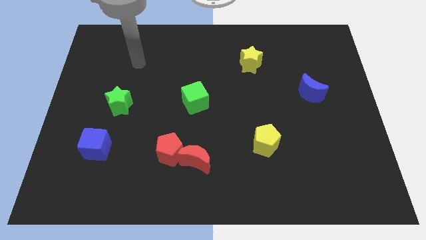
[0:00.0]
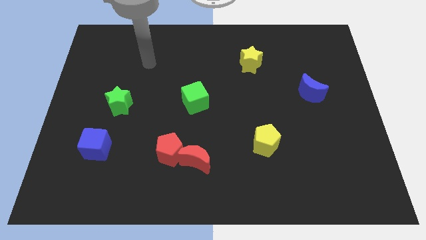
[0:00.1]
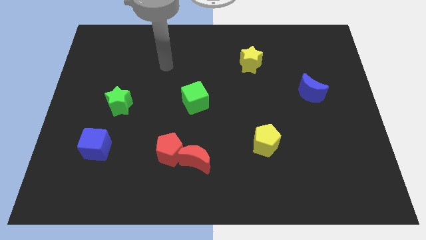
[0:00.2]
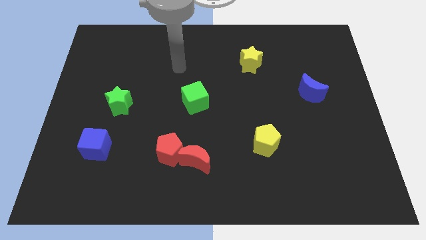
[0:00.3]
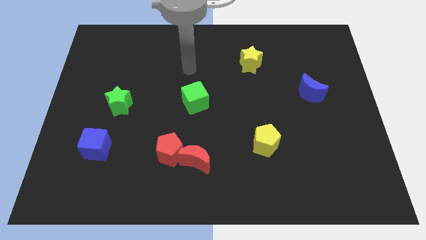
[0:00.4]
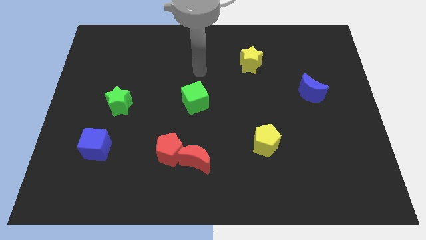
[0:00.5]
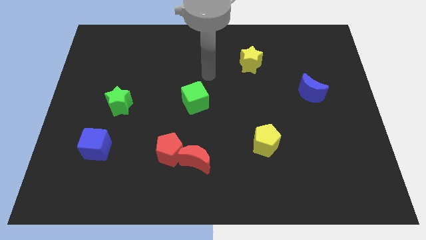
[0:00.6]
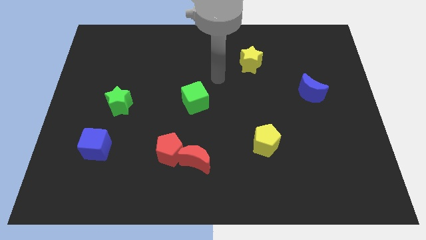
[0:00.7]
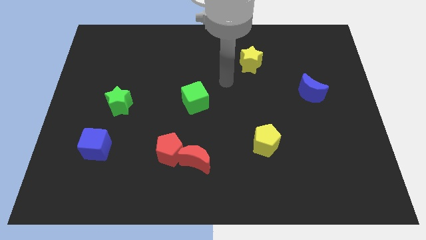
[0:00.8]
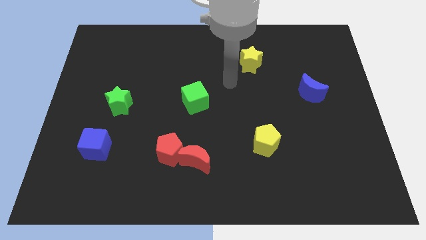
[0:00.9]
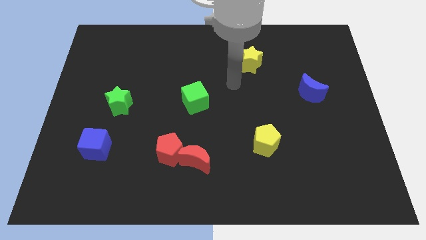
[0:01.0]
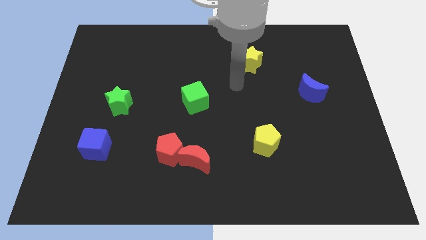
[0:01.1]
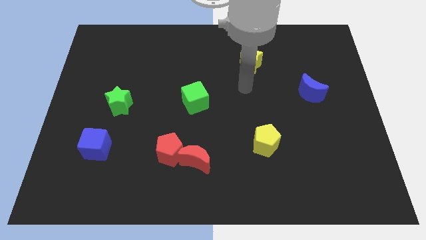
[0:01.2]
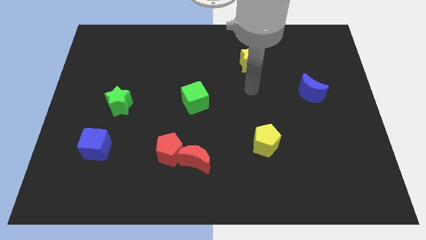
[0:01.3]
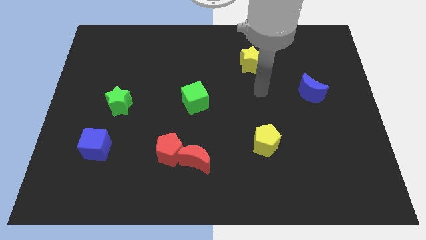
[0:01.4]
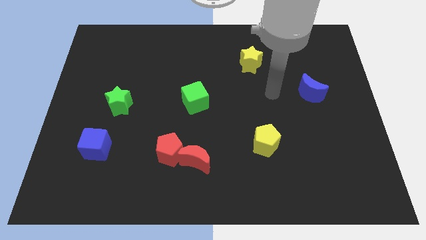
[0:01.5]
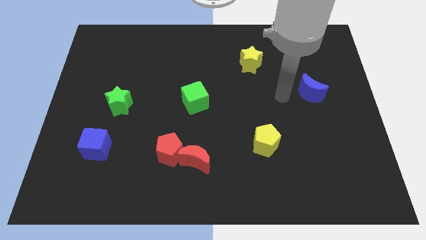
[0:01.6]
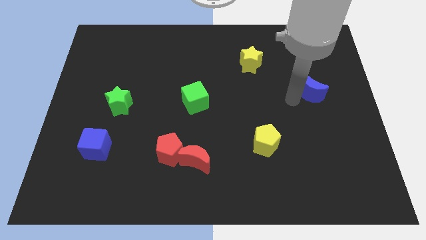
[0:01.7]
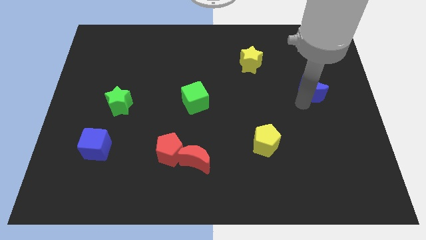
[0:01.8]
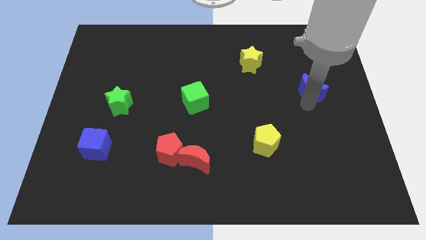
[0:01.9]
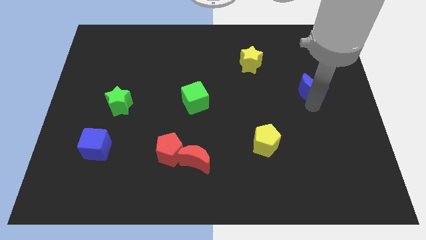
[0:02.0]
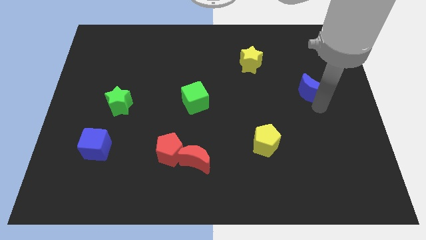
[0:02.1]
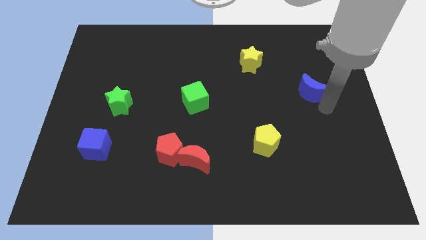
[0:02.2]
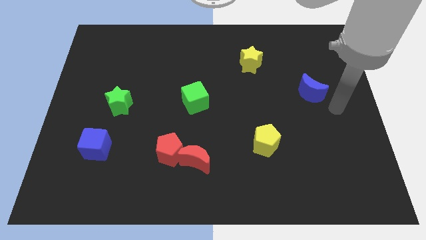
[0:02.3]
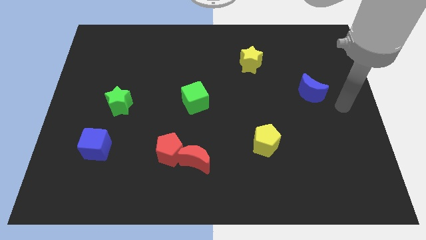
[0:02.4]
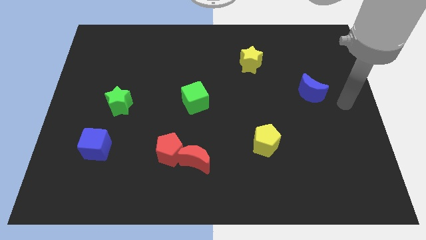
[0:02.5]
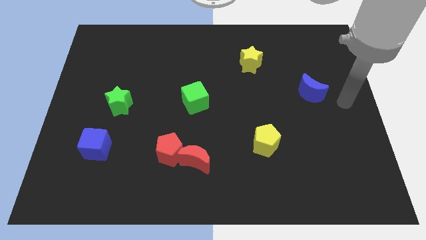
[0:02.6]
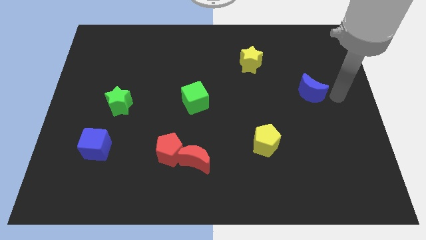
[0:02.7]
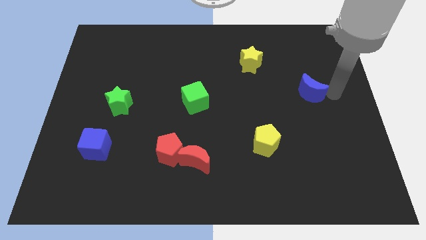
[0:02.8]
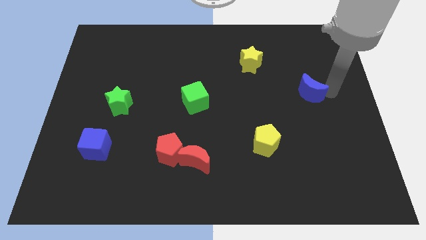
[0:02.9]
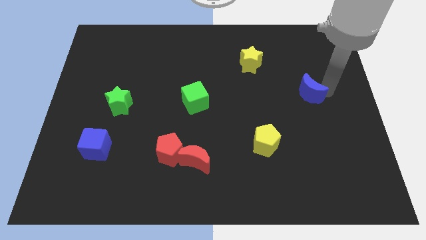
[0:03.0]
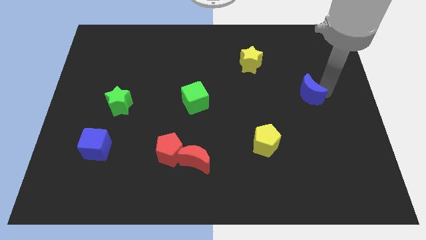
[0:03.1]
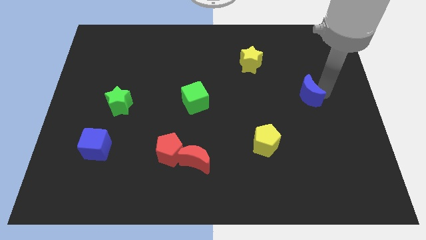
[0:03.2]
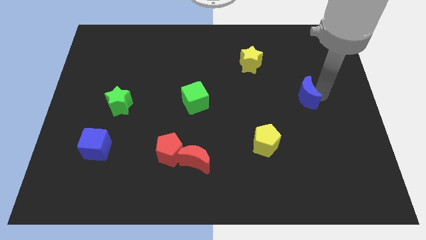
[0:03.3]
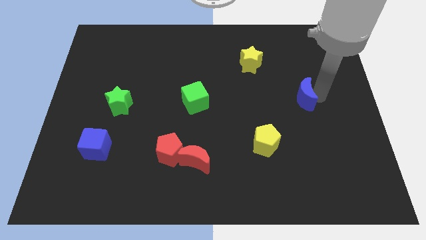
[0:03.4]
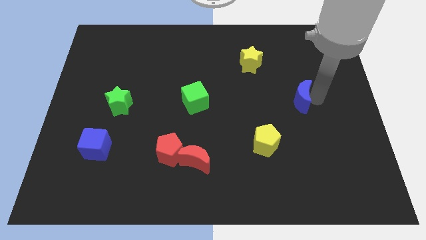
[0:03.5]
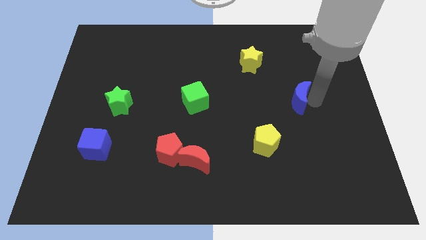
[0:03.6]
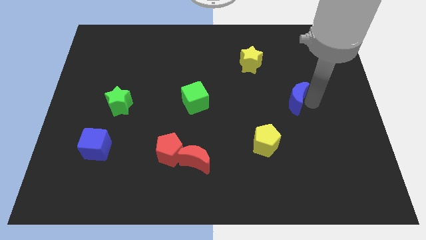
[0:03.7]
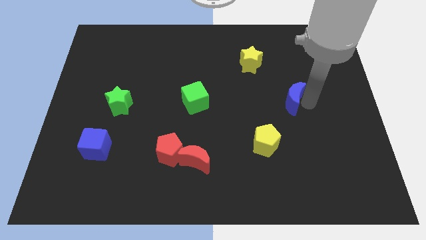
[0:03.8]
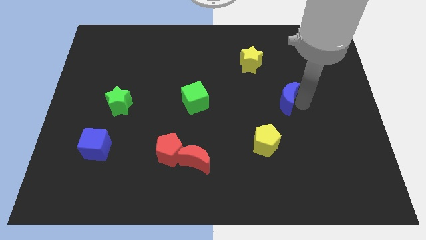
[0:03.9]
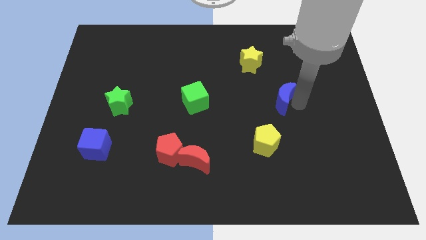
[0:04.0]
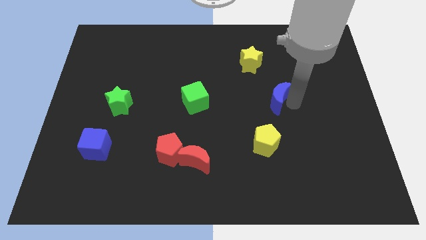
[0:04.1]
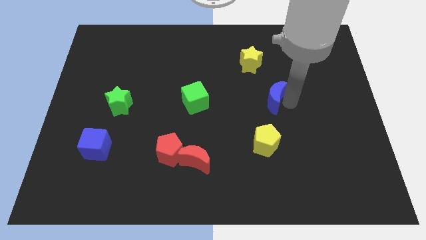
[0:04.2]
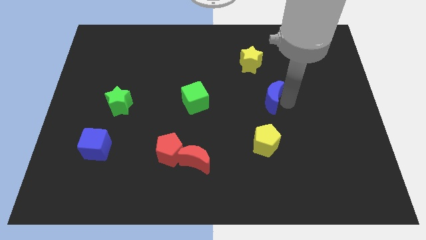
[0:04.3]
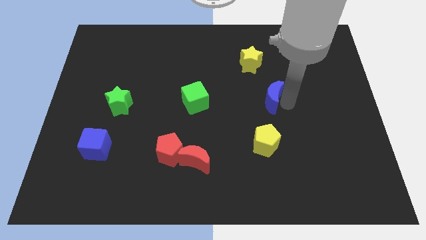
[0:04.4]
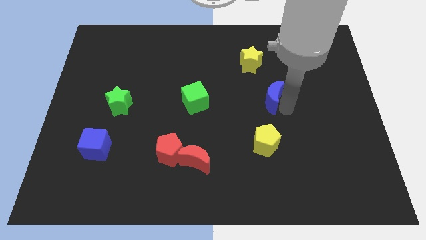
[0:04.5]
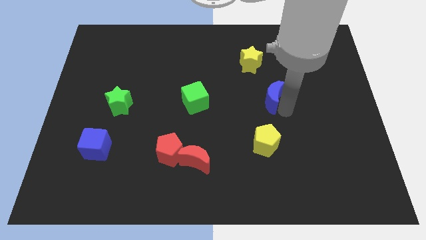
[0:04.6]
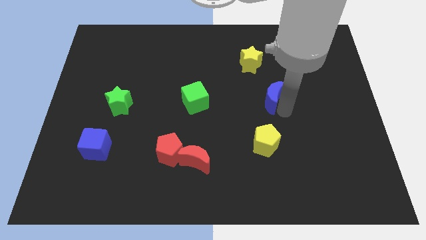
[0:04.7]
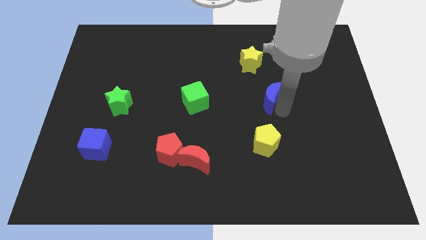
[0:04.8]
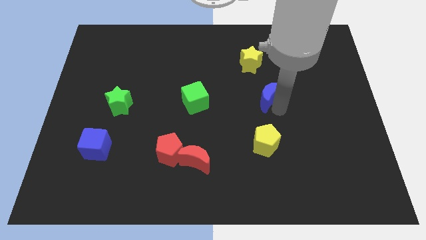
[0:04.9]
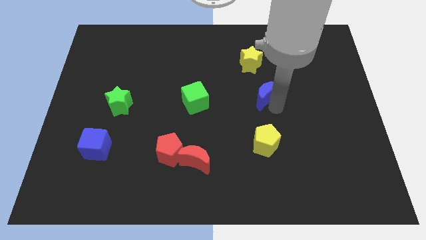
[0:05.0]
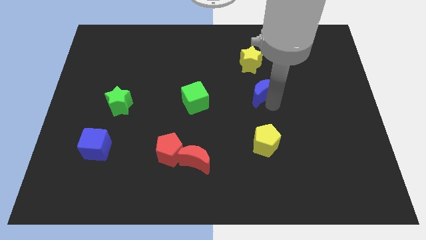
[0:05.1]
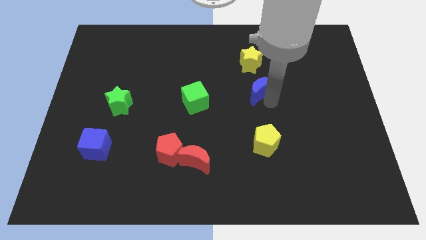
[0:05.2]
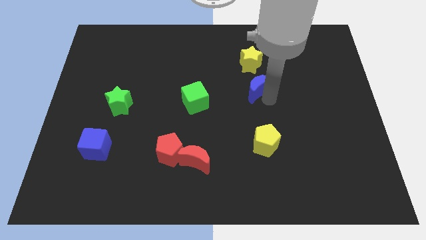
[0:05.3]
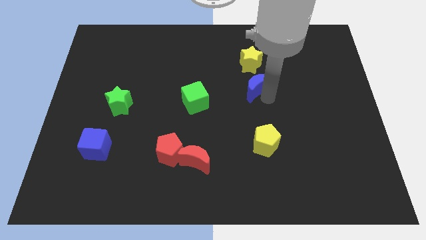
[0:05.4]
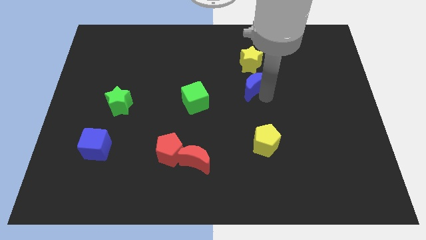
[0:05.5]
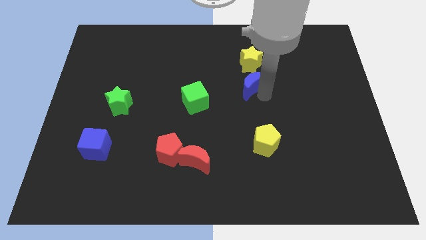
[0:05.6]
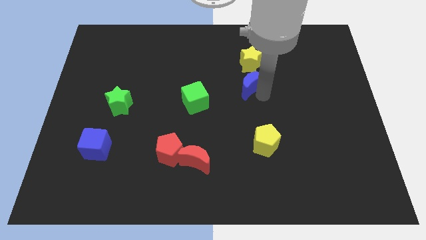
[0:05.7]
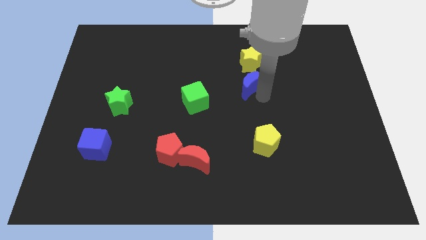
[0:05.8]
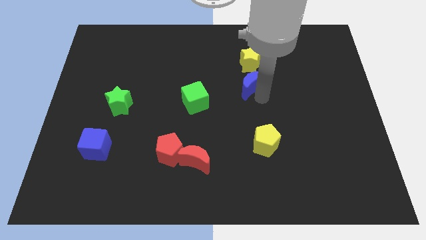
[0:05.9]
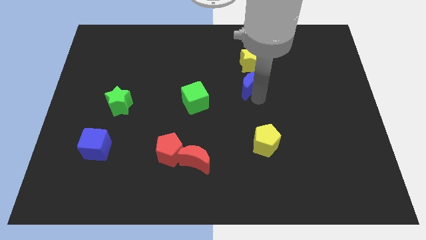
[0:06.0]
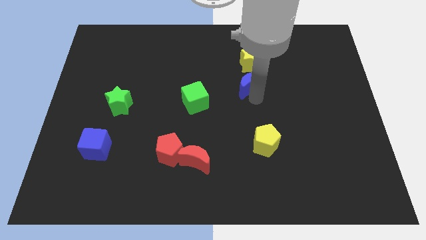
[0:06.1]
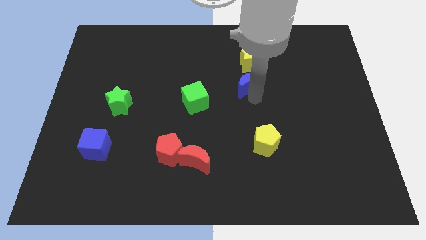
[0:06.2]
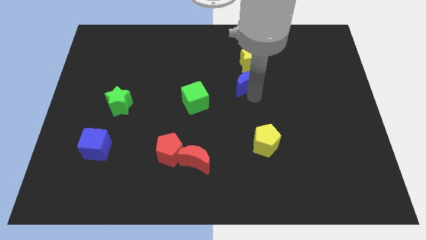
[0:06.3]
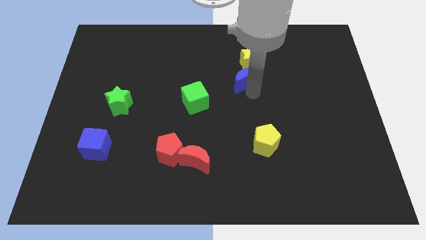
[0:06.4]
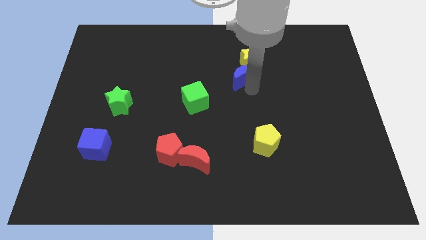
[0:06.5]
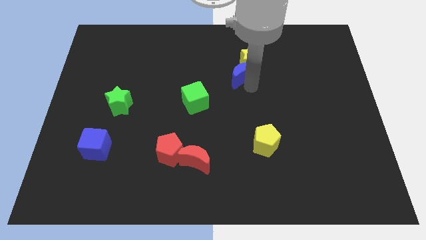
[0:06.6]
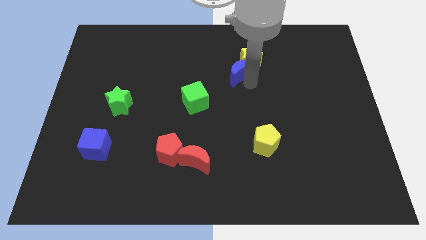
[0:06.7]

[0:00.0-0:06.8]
put the blue moon towards the yellow star

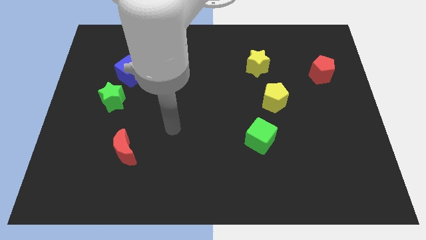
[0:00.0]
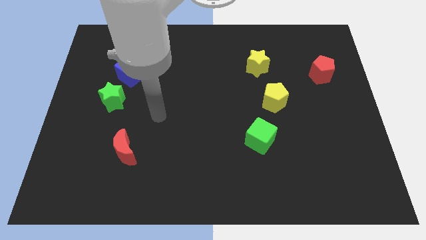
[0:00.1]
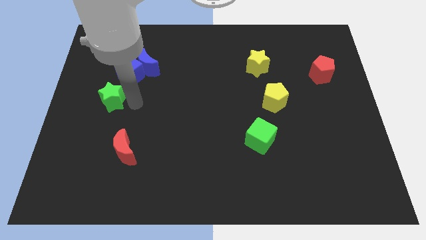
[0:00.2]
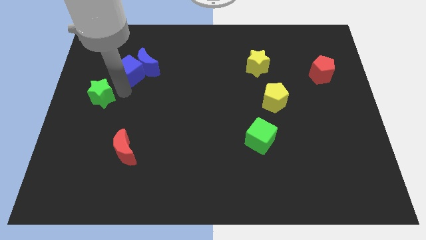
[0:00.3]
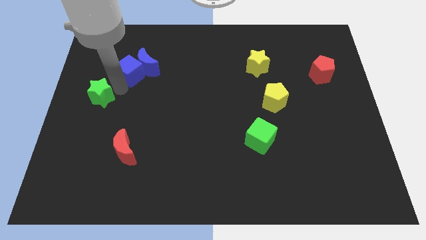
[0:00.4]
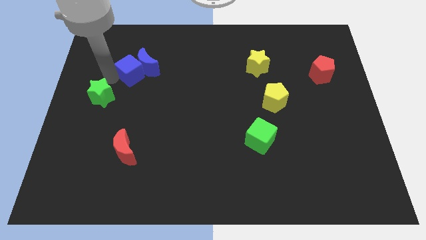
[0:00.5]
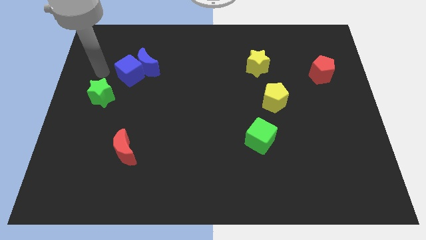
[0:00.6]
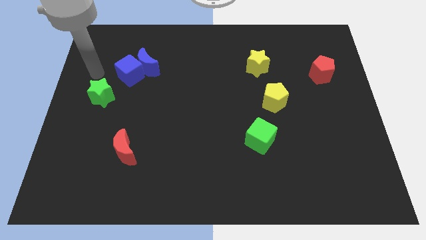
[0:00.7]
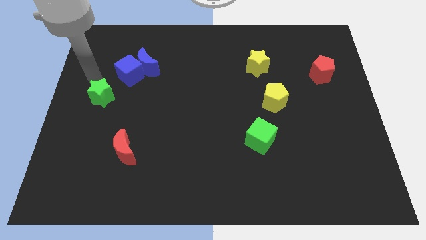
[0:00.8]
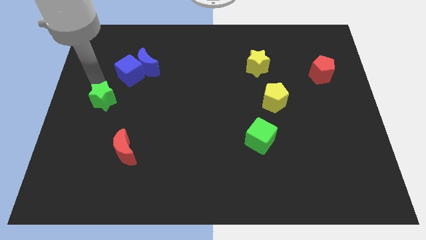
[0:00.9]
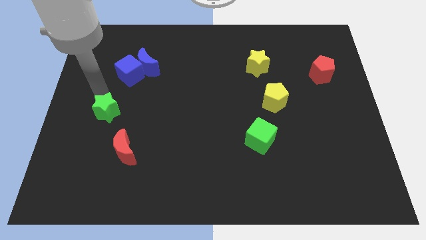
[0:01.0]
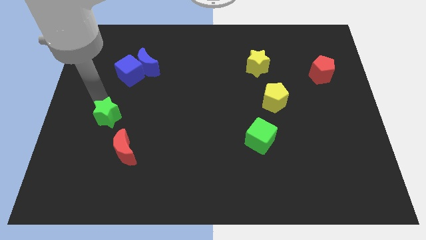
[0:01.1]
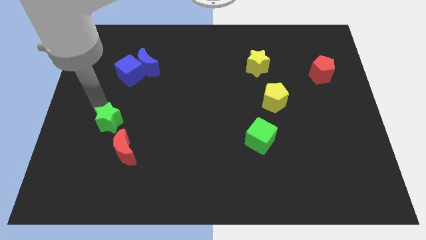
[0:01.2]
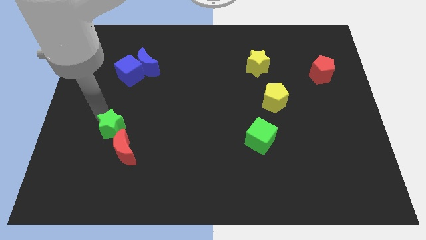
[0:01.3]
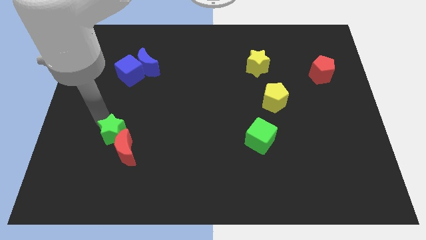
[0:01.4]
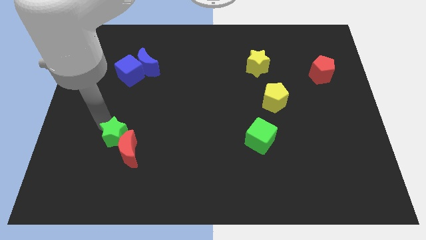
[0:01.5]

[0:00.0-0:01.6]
slide the green star close to the red moon
